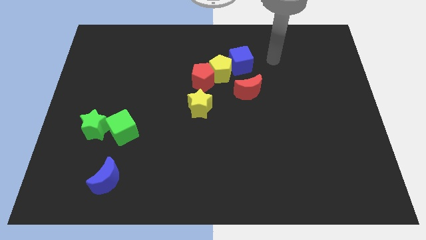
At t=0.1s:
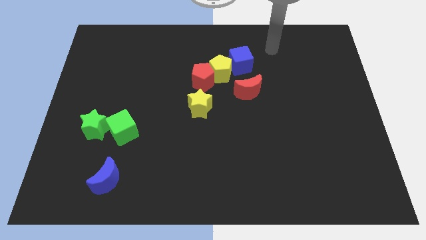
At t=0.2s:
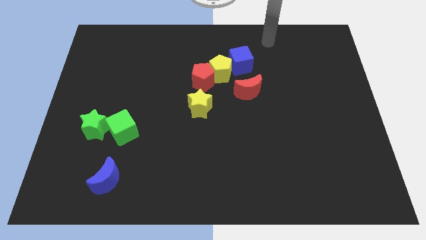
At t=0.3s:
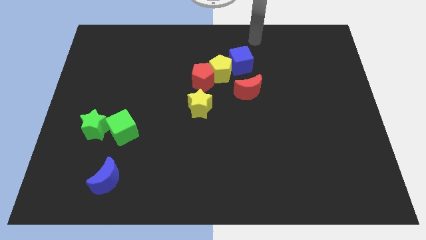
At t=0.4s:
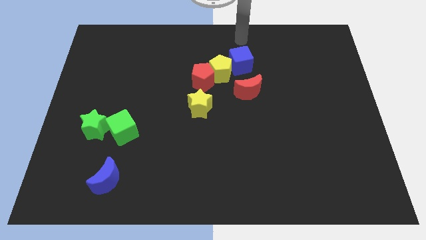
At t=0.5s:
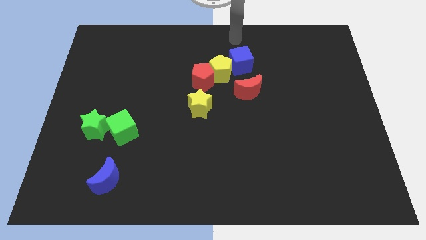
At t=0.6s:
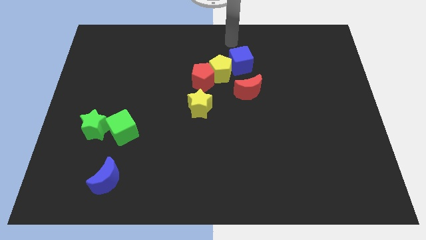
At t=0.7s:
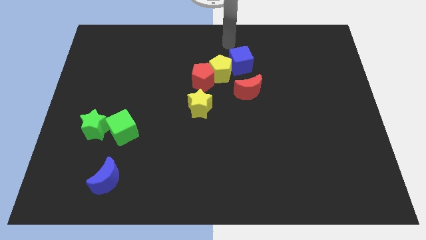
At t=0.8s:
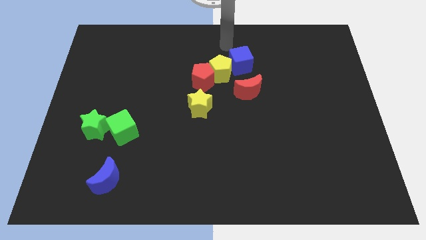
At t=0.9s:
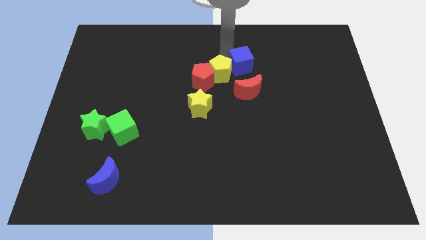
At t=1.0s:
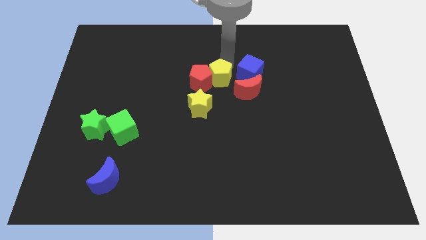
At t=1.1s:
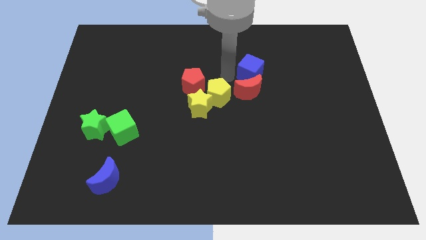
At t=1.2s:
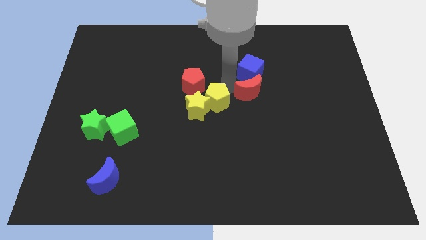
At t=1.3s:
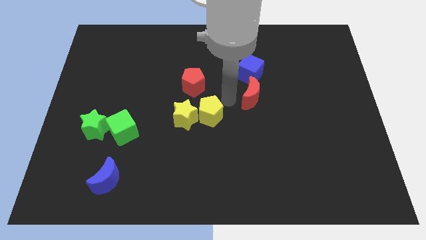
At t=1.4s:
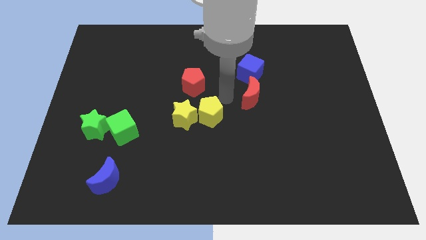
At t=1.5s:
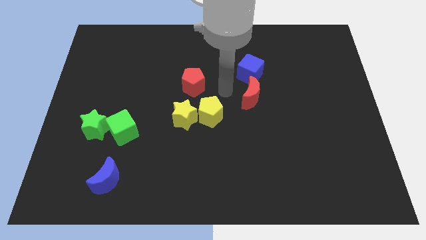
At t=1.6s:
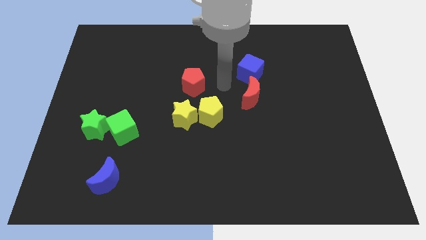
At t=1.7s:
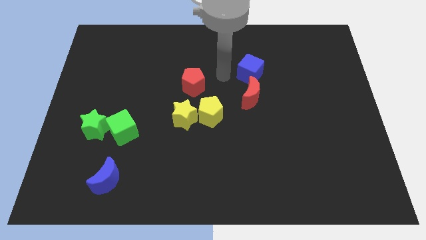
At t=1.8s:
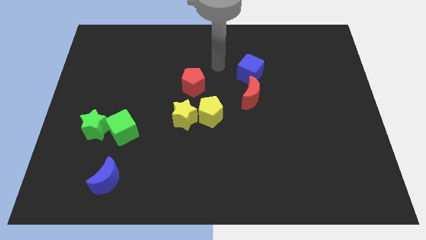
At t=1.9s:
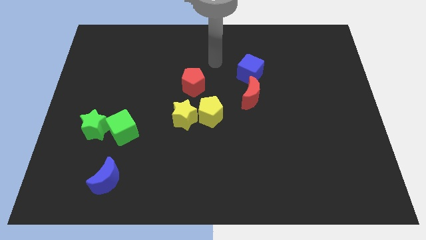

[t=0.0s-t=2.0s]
move the yellow pentagon into the yellow star

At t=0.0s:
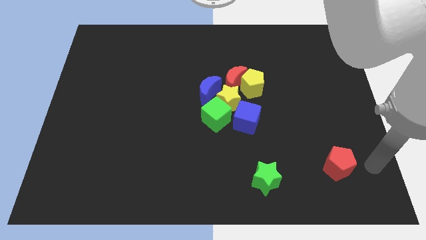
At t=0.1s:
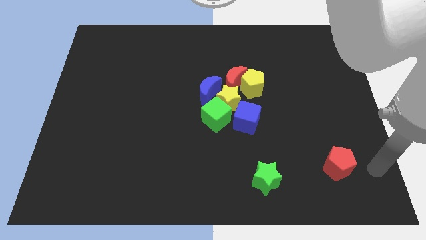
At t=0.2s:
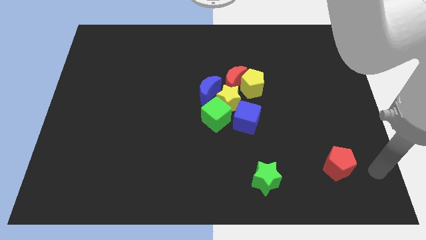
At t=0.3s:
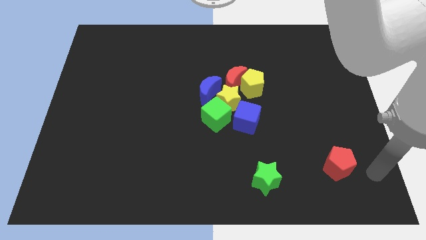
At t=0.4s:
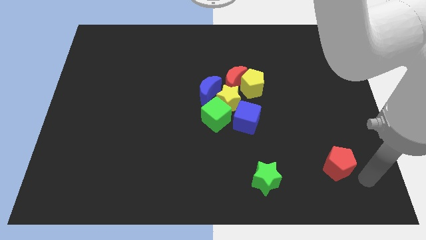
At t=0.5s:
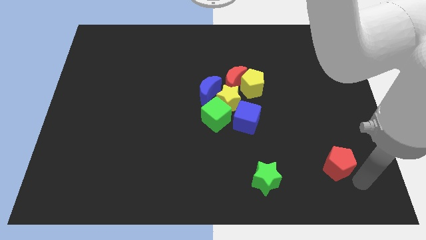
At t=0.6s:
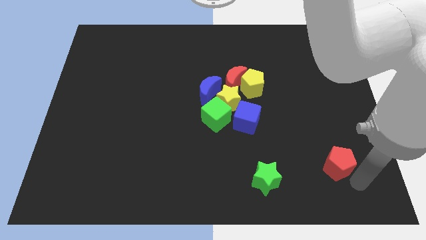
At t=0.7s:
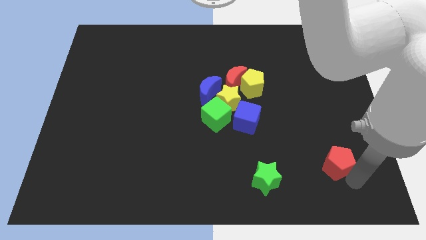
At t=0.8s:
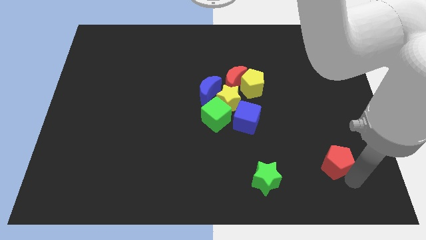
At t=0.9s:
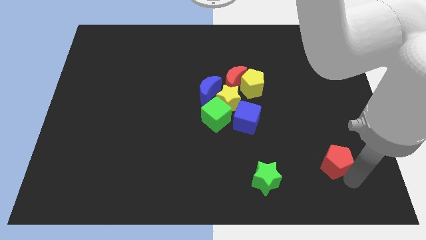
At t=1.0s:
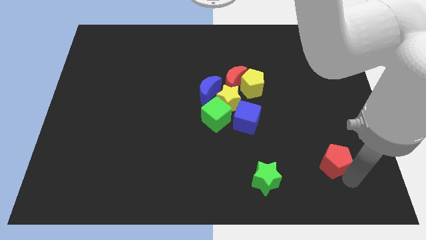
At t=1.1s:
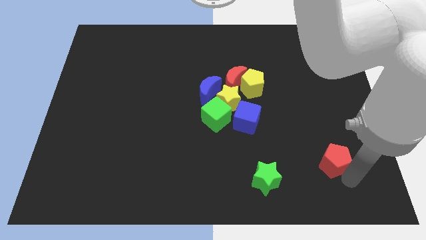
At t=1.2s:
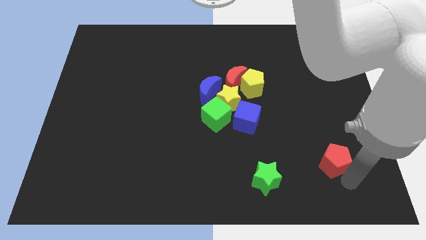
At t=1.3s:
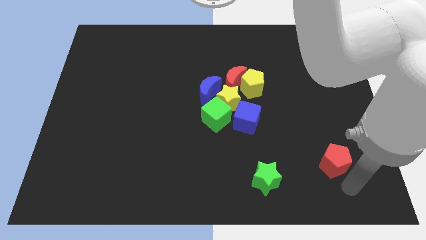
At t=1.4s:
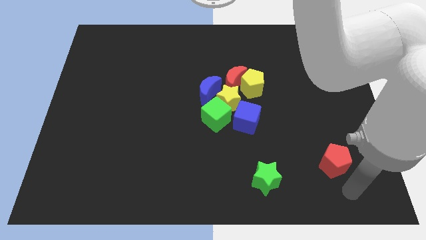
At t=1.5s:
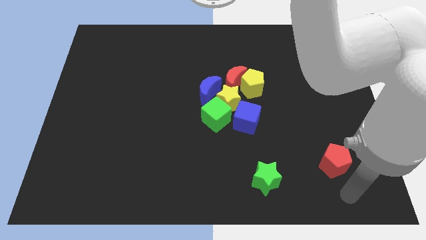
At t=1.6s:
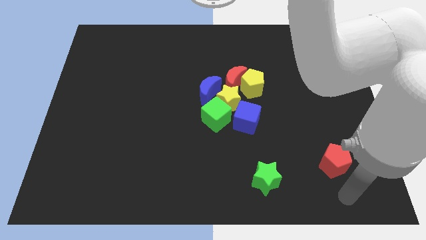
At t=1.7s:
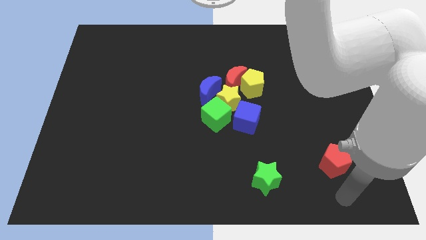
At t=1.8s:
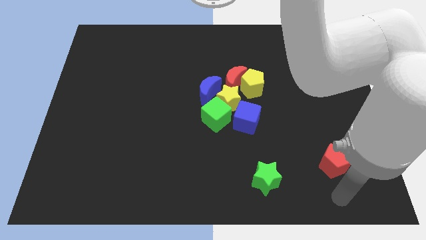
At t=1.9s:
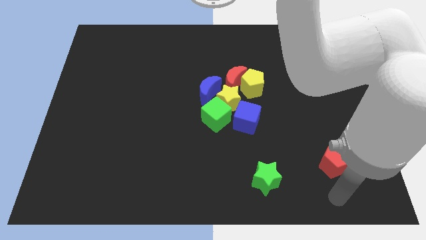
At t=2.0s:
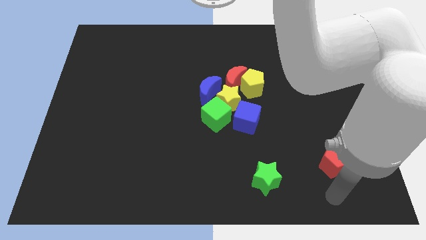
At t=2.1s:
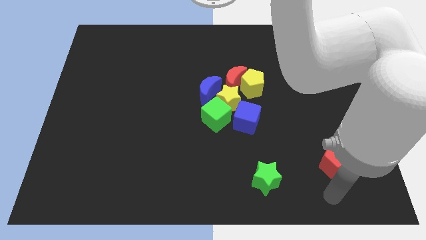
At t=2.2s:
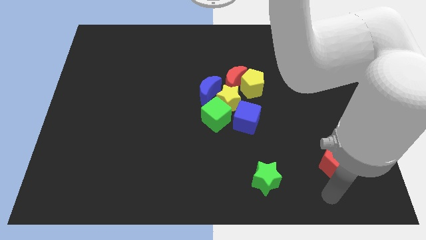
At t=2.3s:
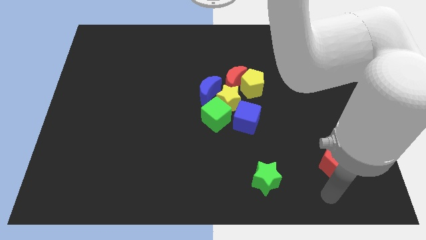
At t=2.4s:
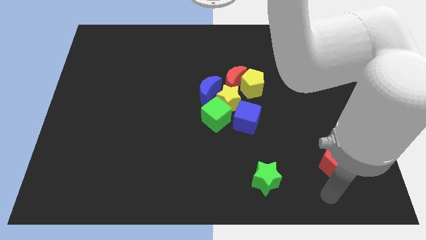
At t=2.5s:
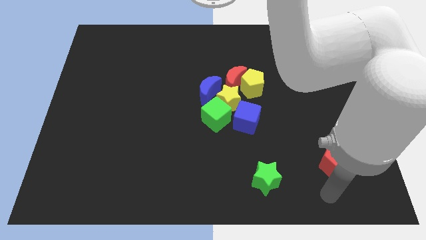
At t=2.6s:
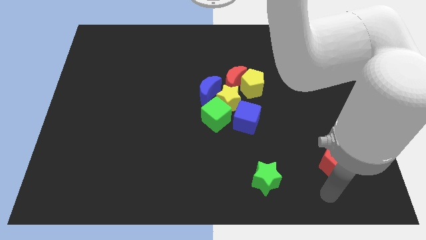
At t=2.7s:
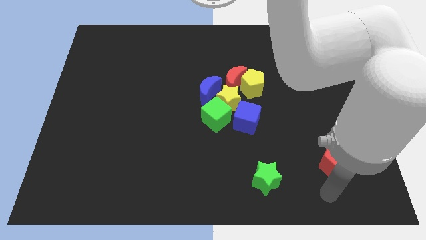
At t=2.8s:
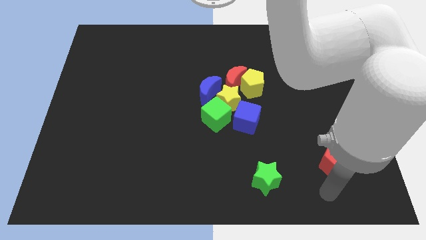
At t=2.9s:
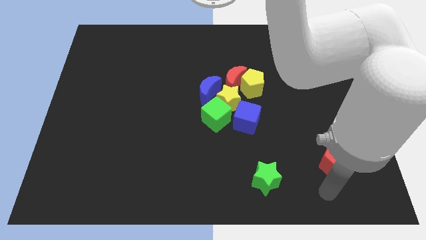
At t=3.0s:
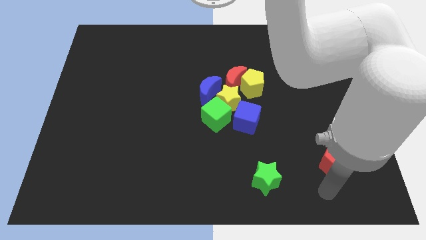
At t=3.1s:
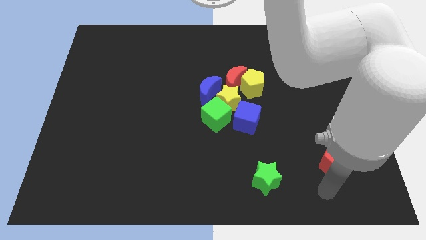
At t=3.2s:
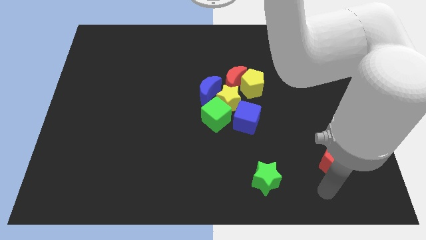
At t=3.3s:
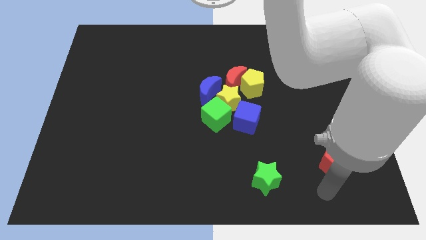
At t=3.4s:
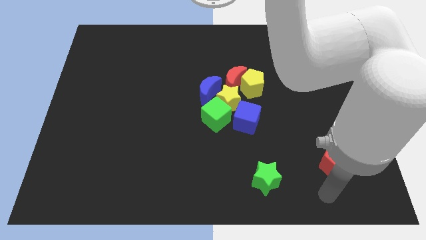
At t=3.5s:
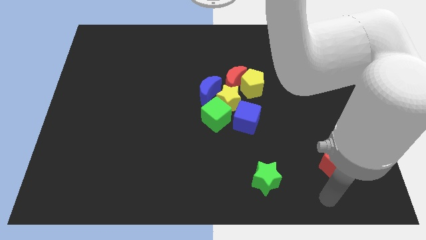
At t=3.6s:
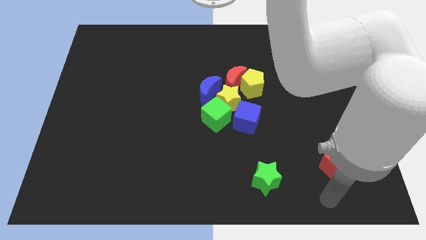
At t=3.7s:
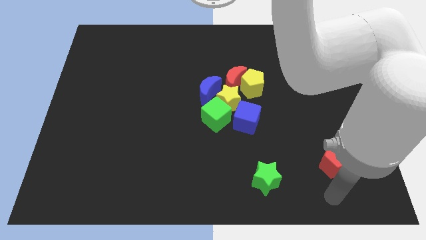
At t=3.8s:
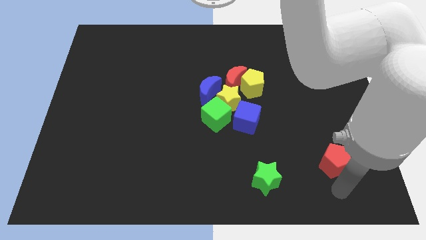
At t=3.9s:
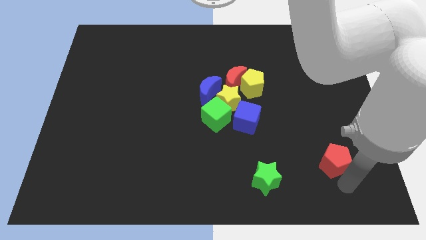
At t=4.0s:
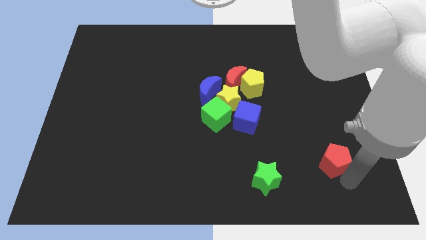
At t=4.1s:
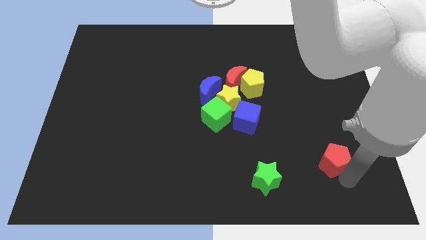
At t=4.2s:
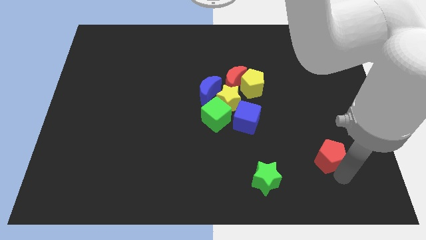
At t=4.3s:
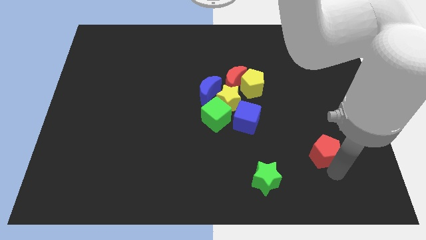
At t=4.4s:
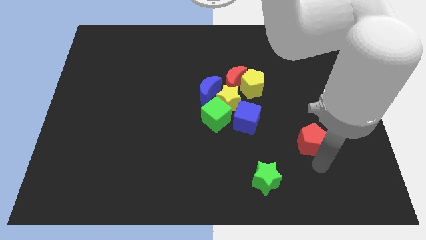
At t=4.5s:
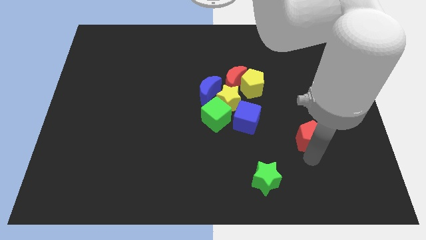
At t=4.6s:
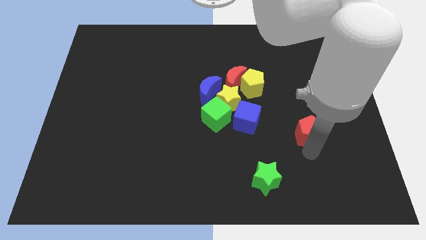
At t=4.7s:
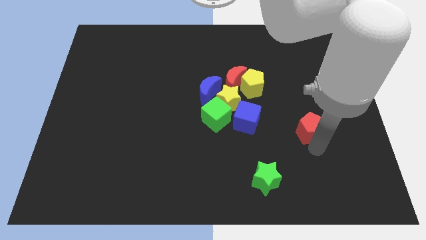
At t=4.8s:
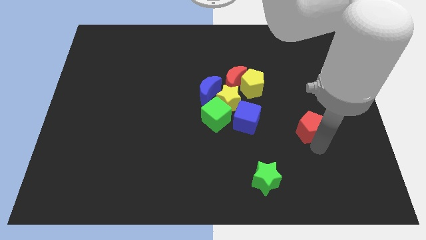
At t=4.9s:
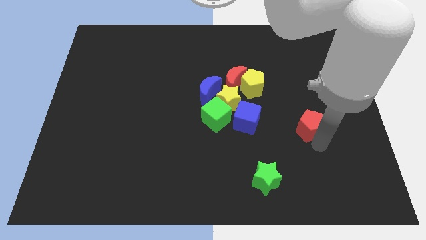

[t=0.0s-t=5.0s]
put the red pentagon diagonally to the right of the green star

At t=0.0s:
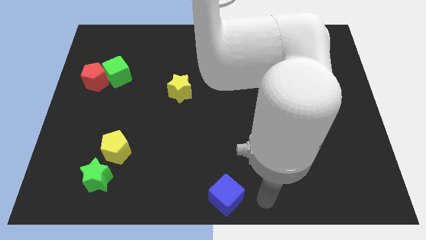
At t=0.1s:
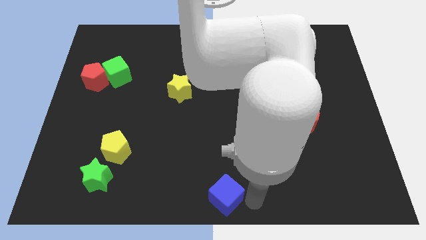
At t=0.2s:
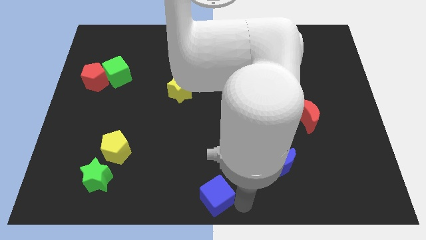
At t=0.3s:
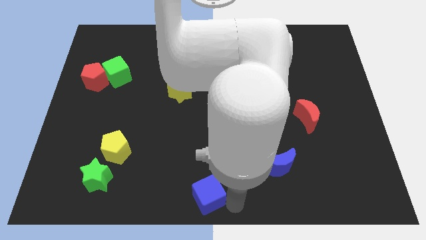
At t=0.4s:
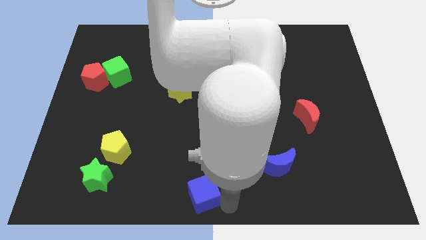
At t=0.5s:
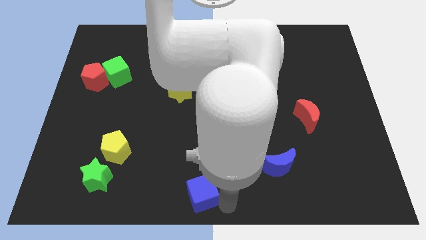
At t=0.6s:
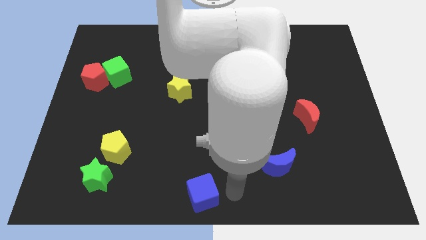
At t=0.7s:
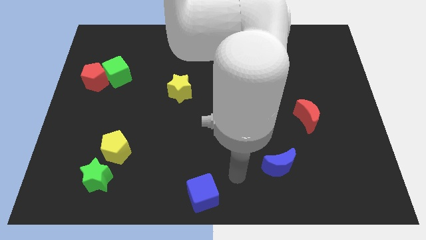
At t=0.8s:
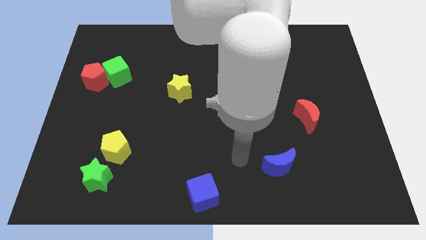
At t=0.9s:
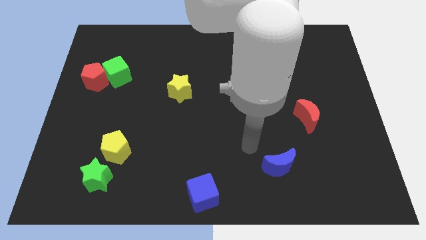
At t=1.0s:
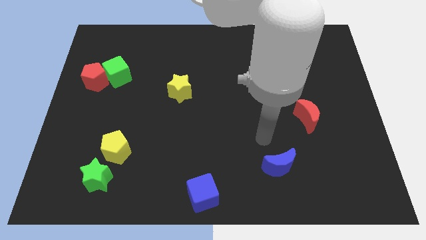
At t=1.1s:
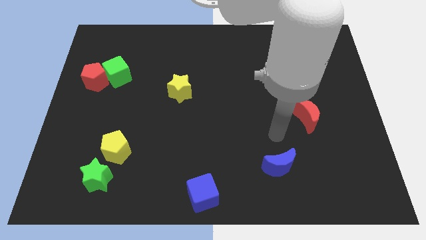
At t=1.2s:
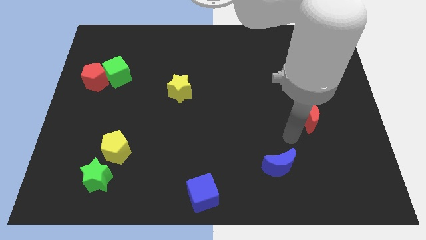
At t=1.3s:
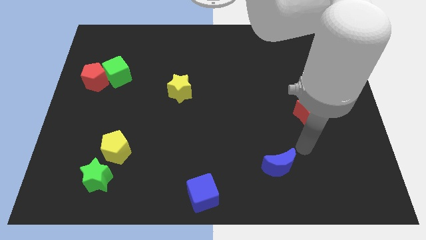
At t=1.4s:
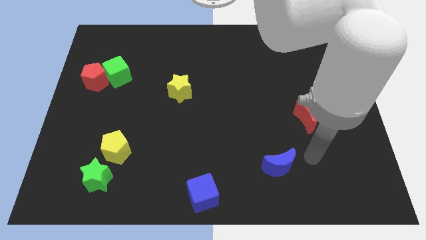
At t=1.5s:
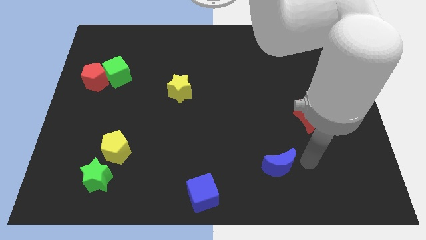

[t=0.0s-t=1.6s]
slide the blue cube slightly to the left

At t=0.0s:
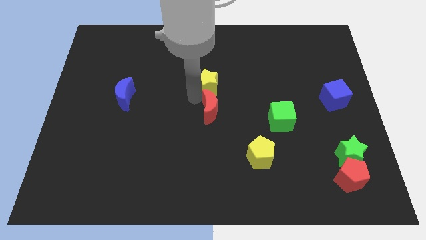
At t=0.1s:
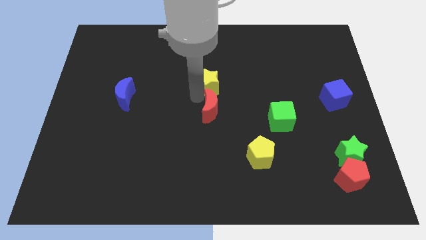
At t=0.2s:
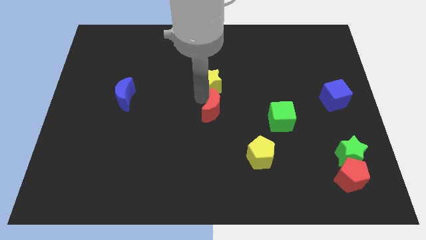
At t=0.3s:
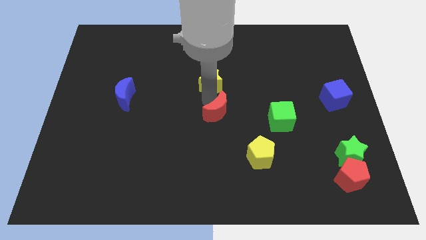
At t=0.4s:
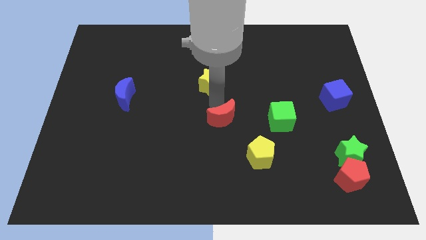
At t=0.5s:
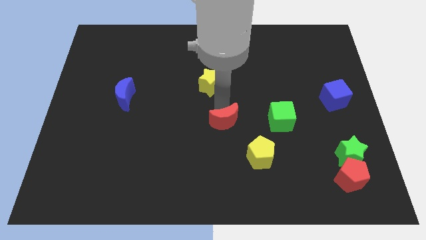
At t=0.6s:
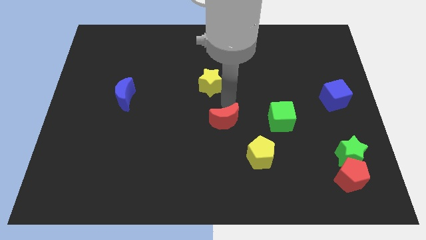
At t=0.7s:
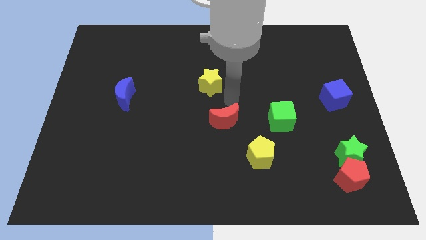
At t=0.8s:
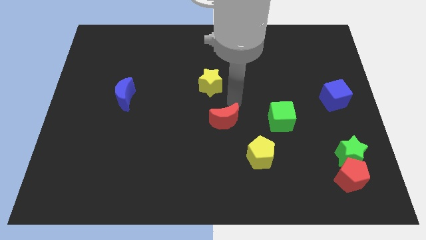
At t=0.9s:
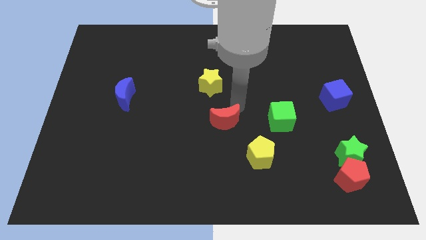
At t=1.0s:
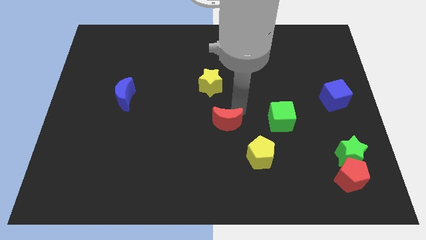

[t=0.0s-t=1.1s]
separate red moon from yellow star
